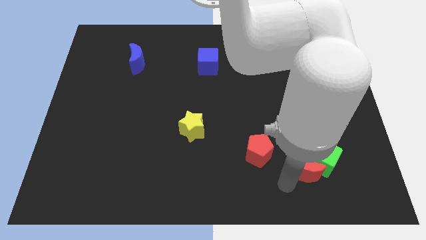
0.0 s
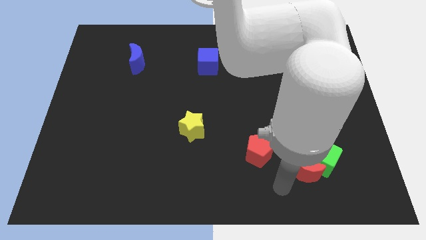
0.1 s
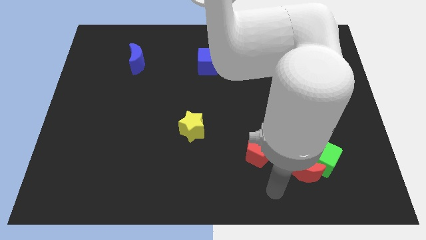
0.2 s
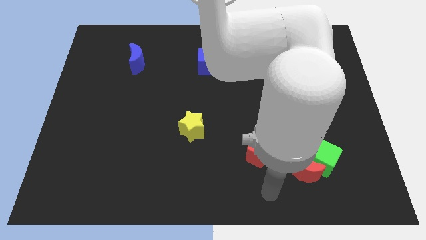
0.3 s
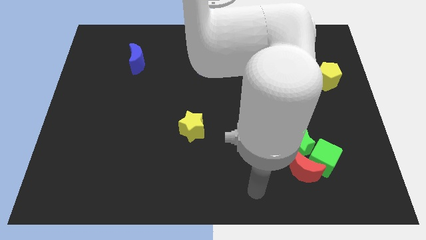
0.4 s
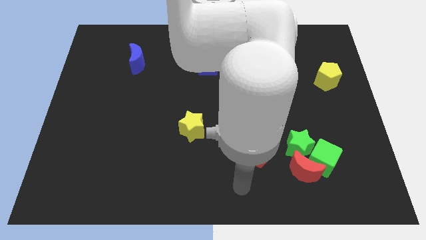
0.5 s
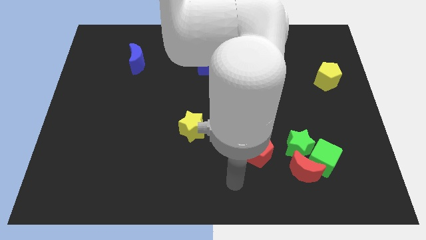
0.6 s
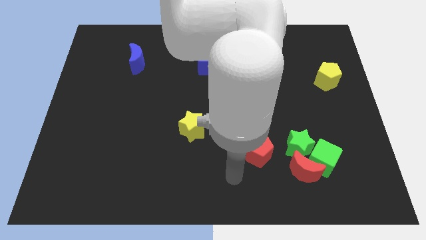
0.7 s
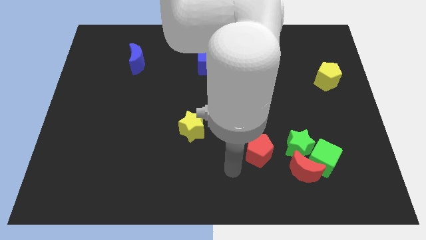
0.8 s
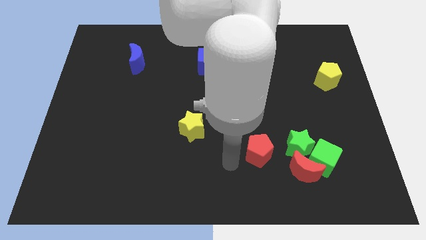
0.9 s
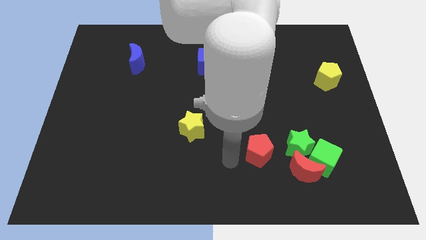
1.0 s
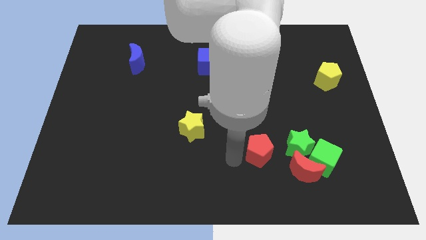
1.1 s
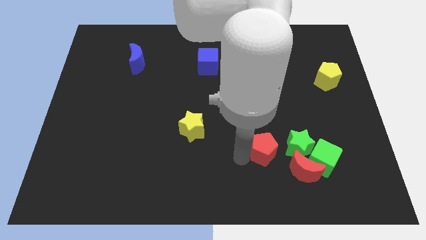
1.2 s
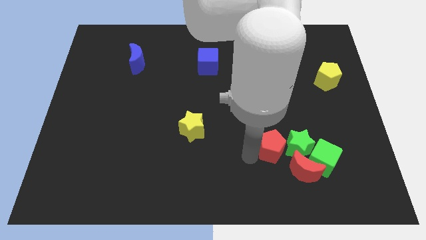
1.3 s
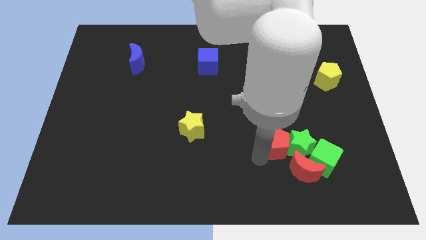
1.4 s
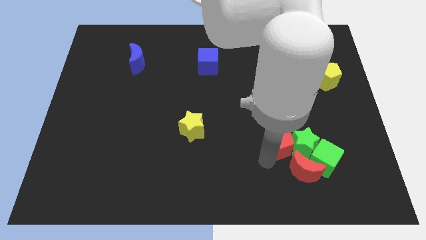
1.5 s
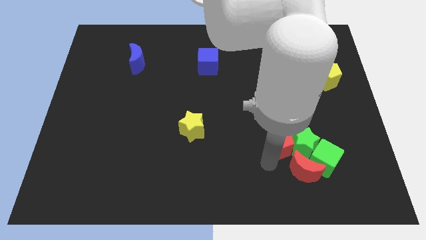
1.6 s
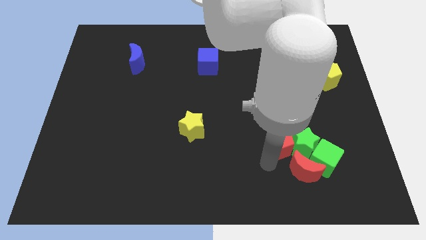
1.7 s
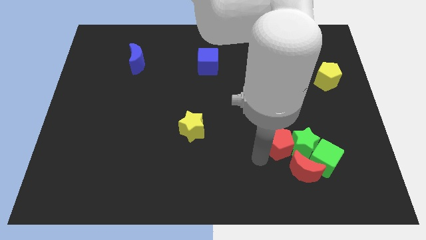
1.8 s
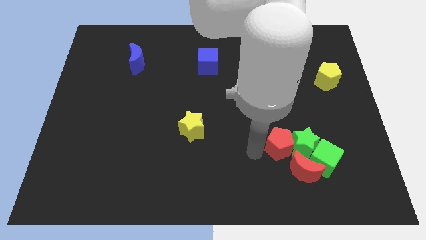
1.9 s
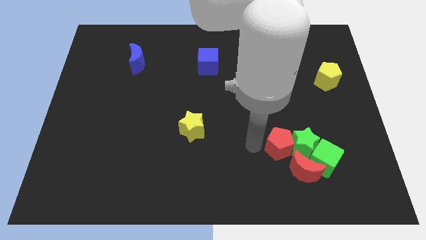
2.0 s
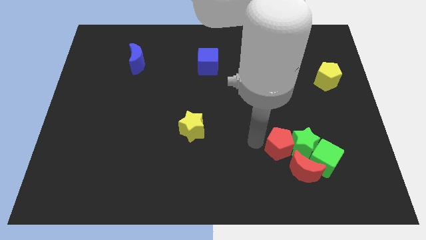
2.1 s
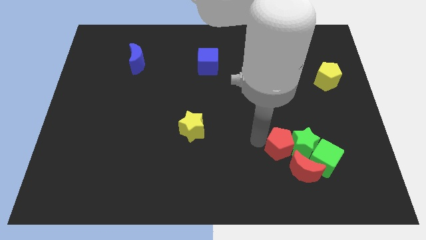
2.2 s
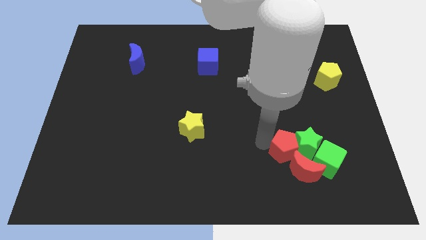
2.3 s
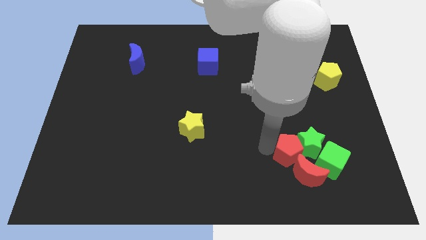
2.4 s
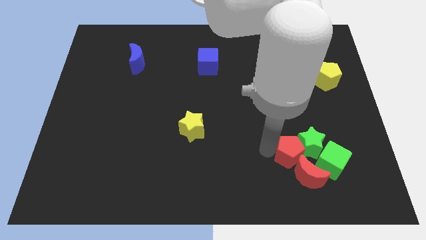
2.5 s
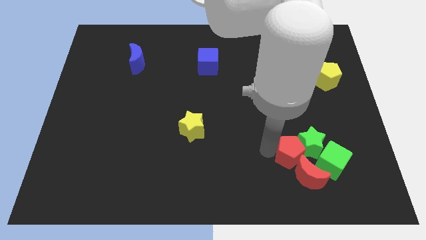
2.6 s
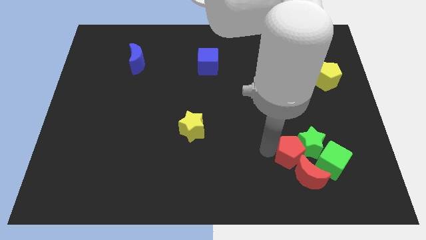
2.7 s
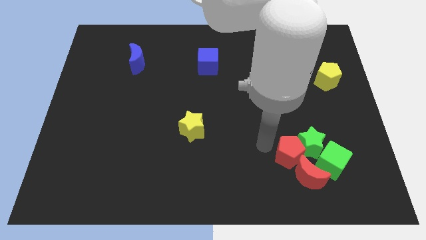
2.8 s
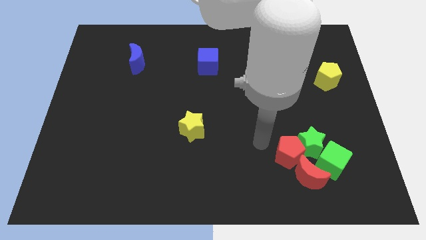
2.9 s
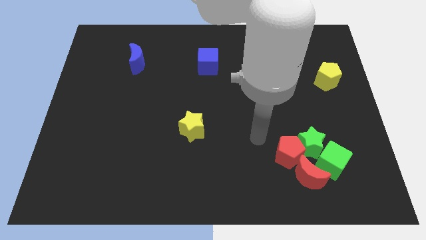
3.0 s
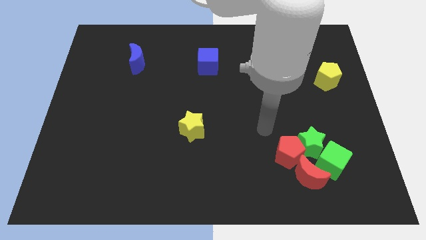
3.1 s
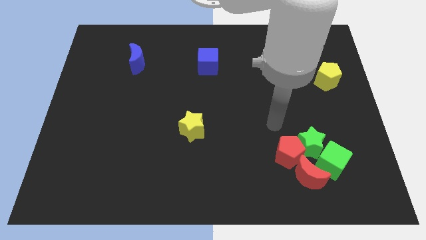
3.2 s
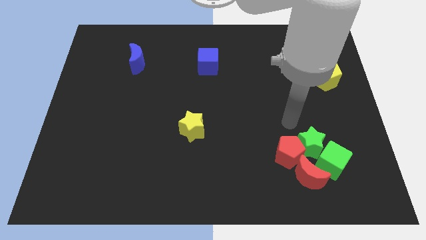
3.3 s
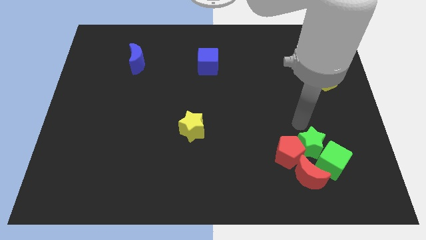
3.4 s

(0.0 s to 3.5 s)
push the red pentagon into the red moon

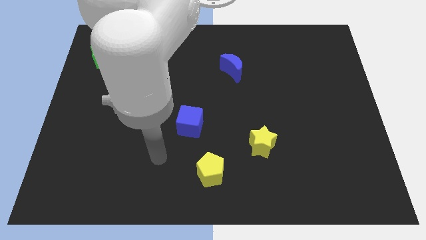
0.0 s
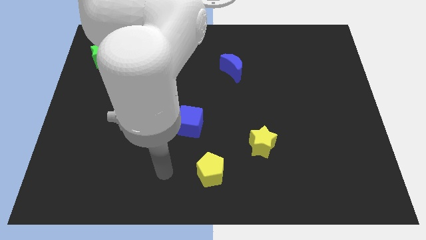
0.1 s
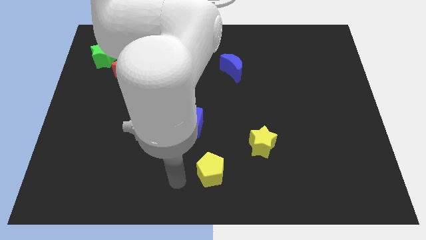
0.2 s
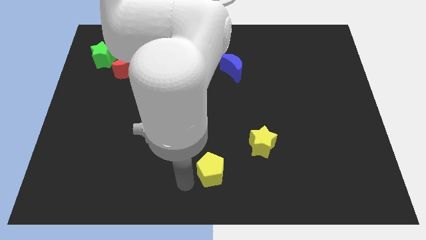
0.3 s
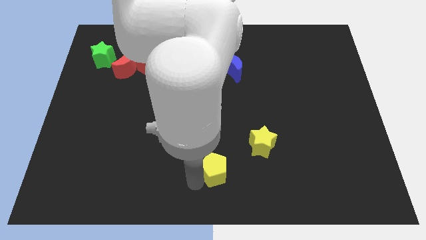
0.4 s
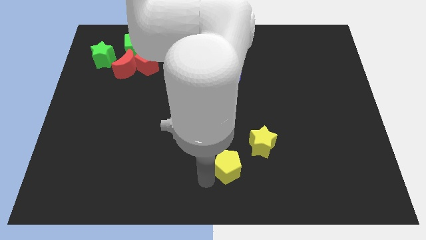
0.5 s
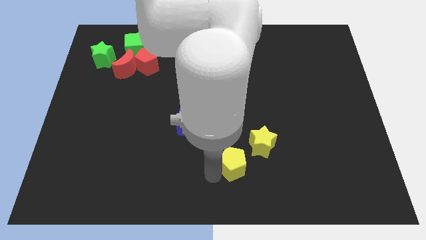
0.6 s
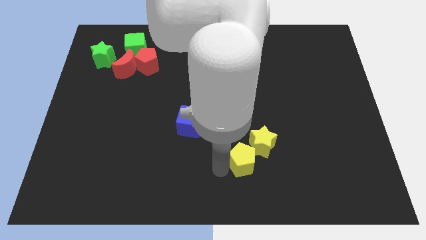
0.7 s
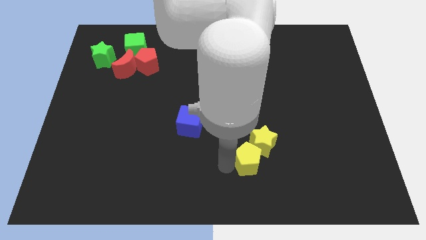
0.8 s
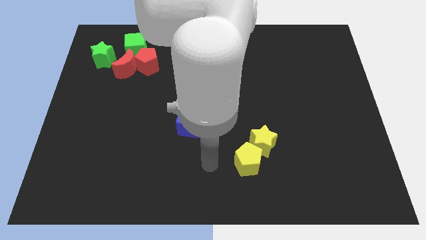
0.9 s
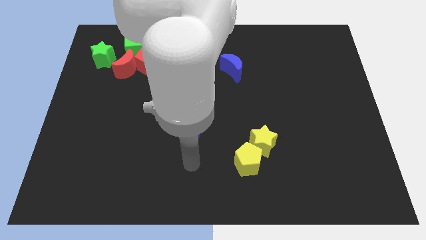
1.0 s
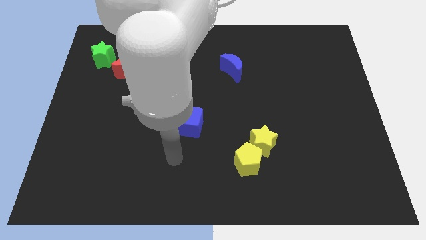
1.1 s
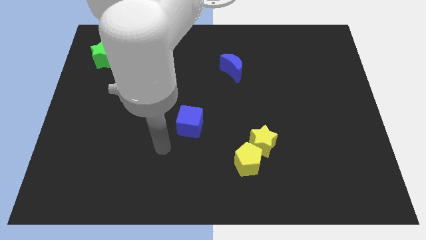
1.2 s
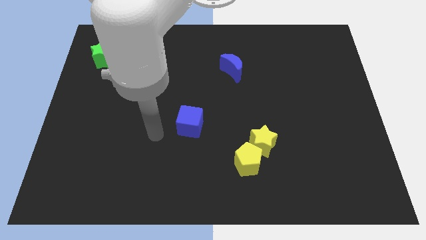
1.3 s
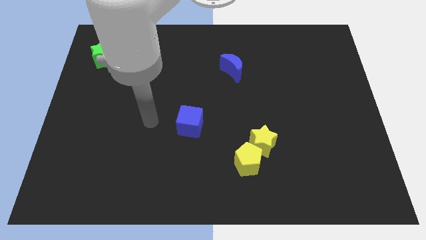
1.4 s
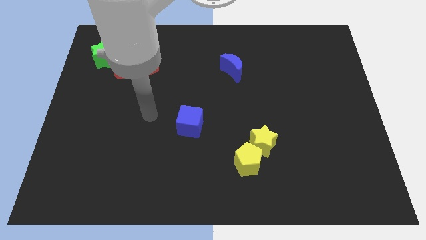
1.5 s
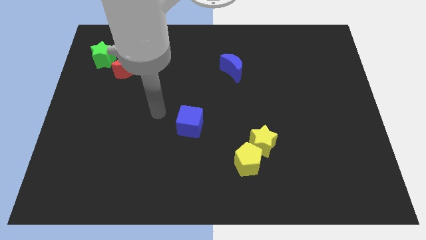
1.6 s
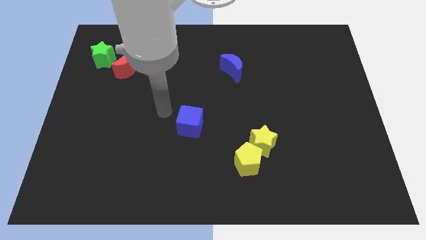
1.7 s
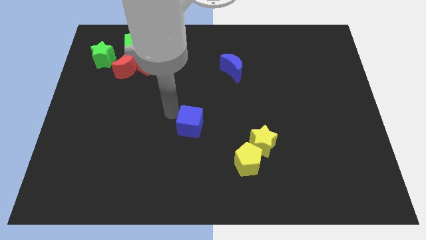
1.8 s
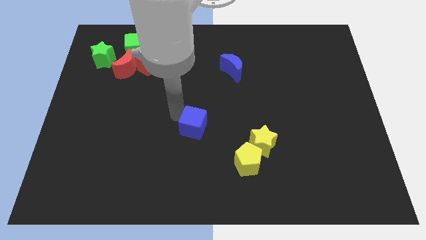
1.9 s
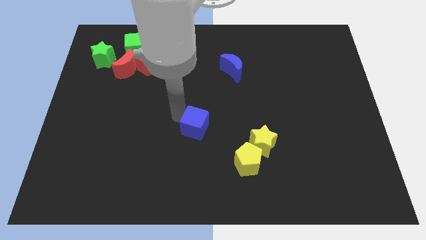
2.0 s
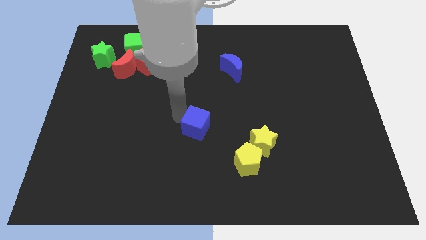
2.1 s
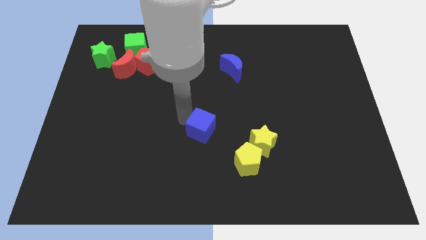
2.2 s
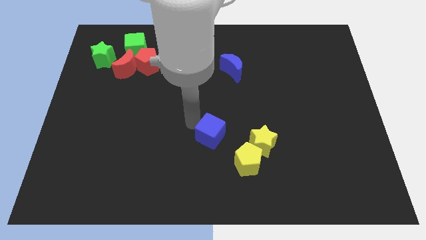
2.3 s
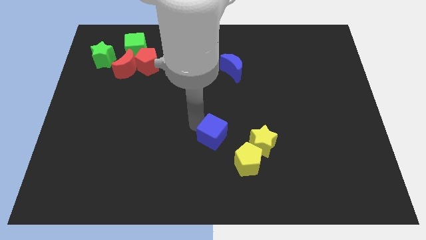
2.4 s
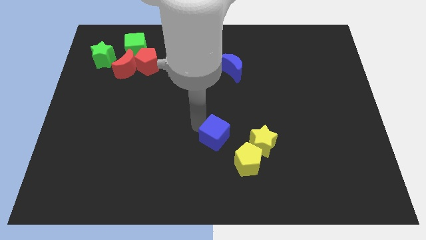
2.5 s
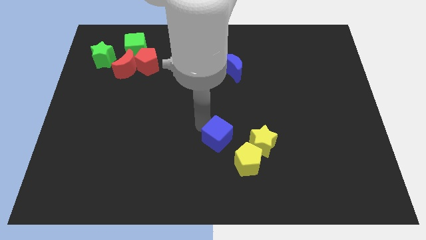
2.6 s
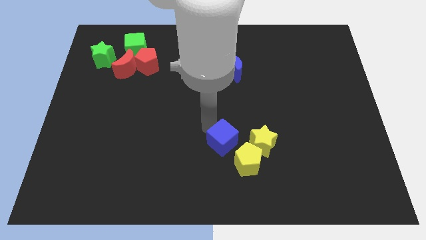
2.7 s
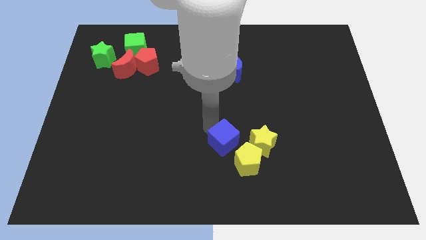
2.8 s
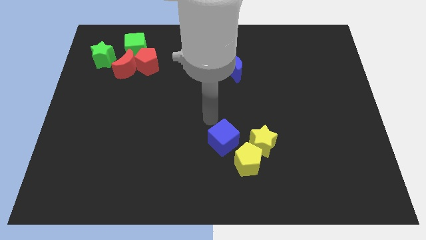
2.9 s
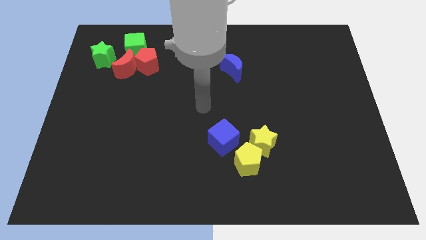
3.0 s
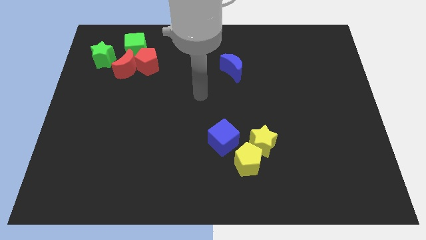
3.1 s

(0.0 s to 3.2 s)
push the yellow pentagon and the blue cube towards the yellow star

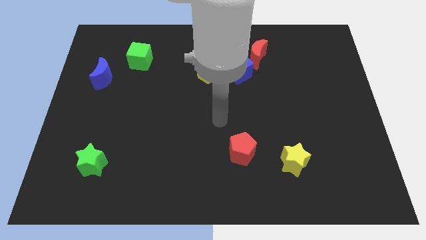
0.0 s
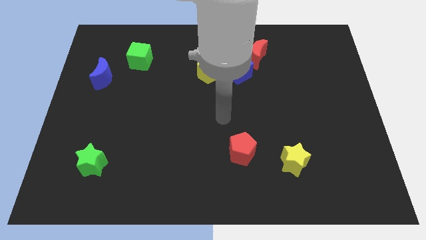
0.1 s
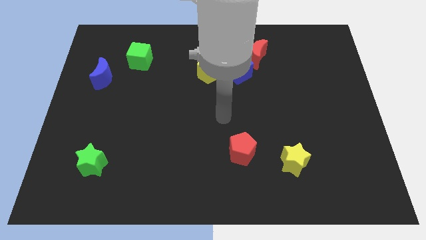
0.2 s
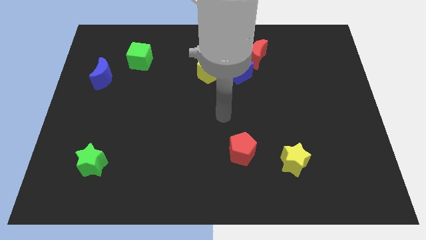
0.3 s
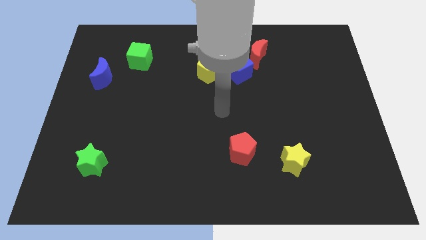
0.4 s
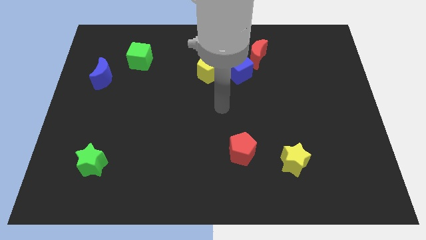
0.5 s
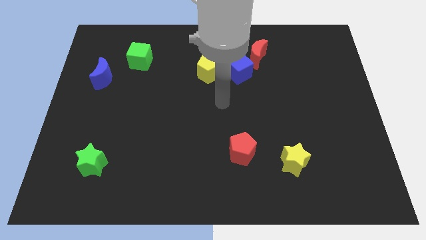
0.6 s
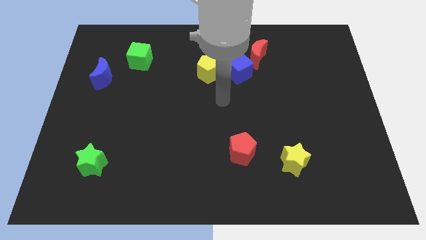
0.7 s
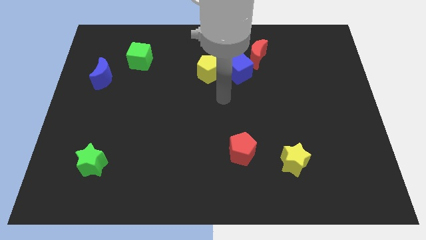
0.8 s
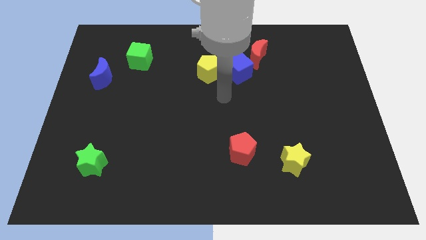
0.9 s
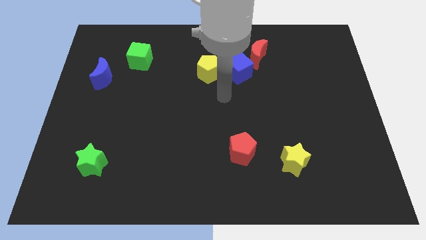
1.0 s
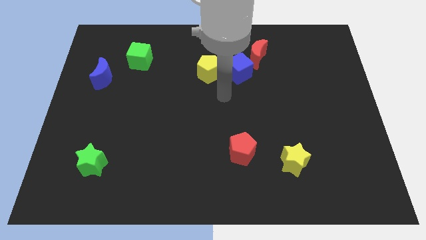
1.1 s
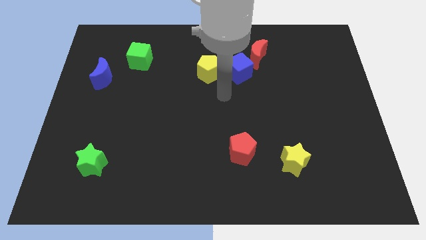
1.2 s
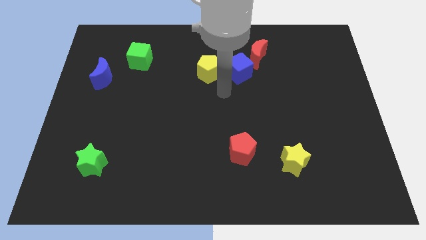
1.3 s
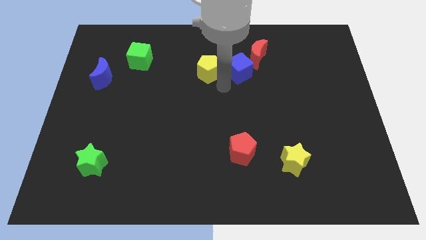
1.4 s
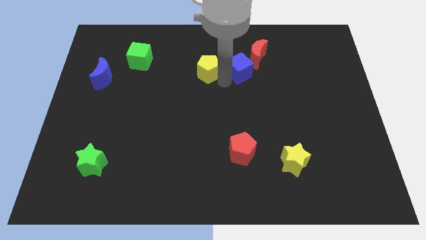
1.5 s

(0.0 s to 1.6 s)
separate the blue cube from the yellow pentagon

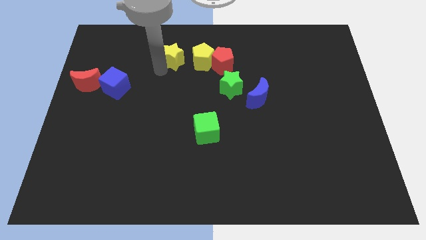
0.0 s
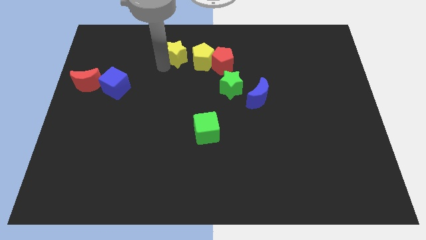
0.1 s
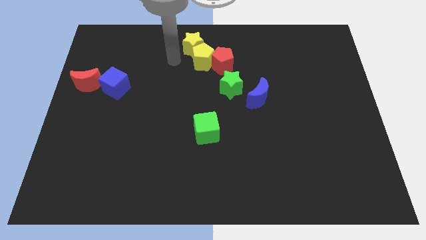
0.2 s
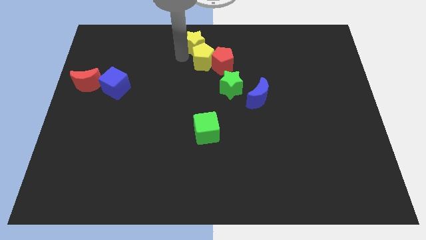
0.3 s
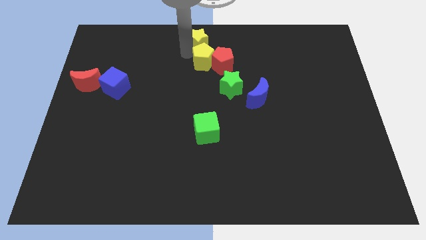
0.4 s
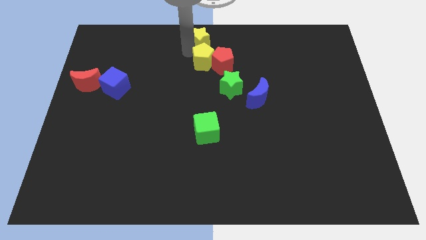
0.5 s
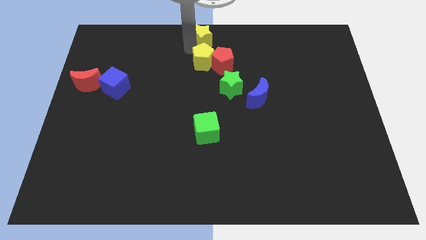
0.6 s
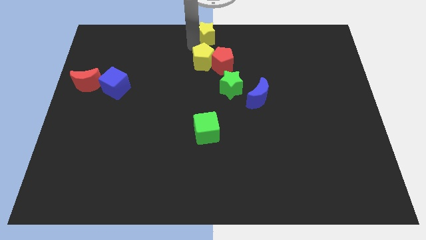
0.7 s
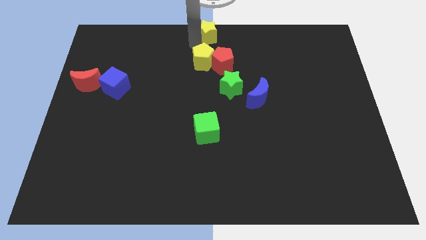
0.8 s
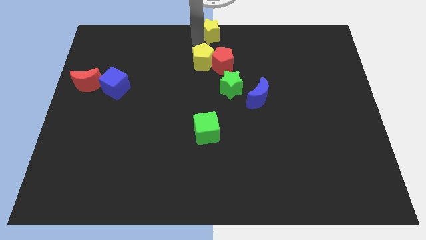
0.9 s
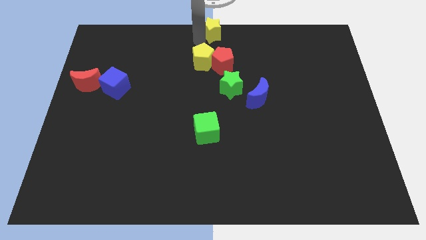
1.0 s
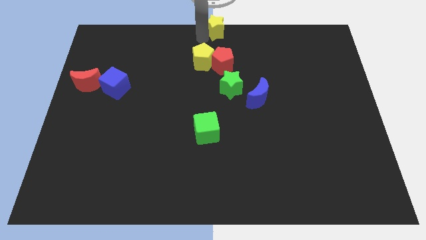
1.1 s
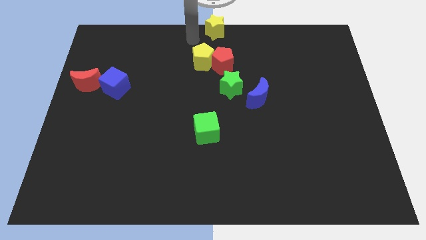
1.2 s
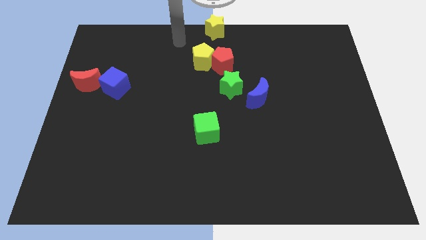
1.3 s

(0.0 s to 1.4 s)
push the yellow star to the top center of the board
